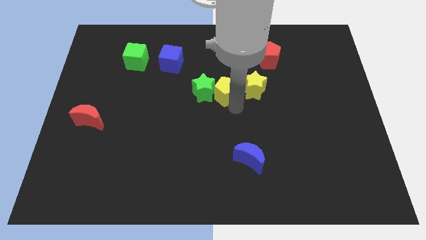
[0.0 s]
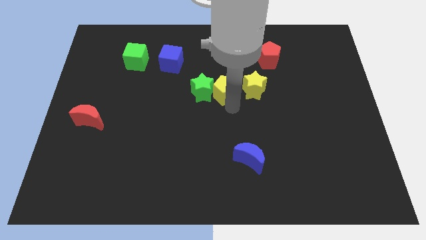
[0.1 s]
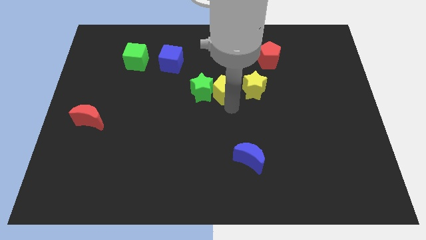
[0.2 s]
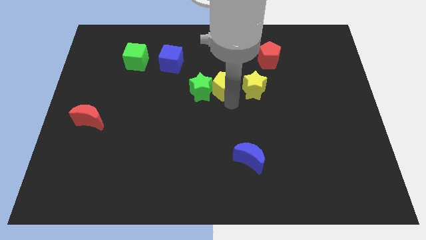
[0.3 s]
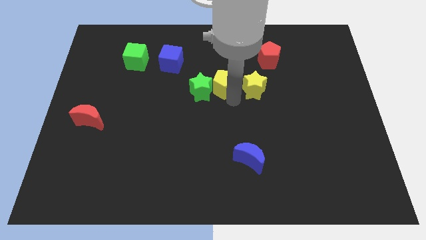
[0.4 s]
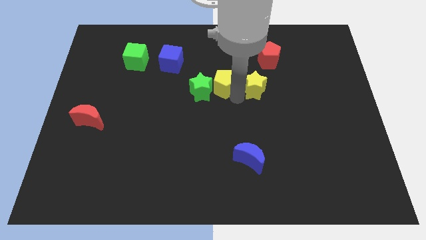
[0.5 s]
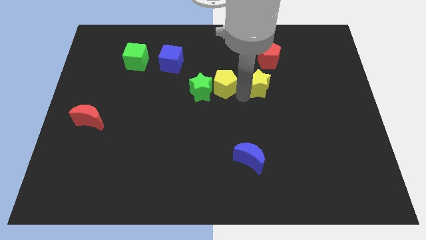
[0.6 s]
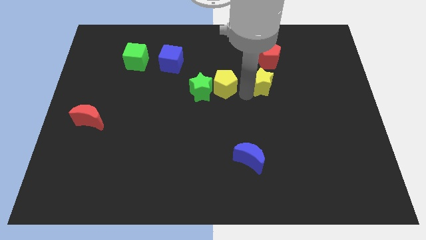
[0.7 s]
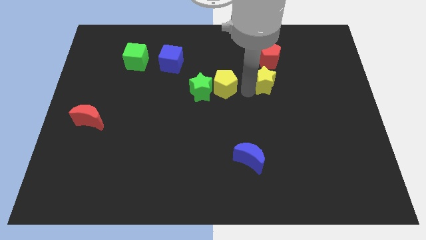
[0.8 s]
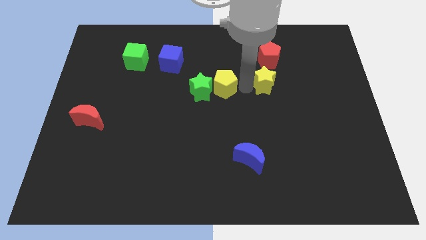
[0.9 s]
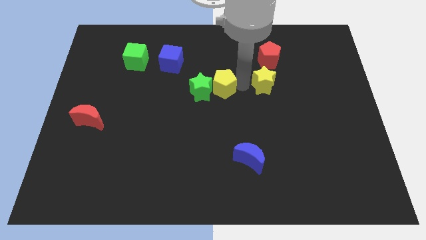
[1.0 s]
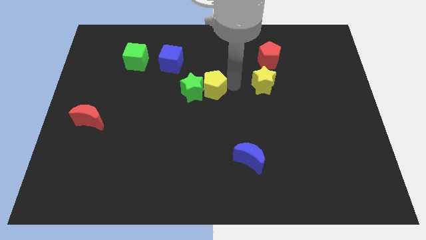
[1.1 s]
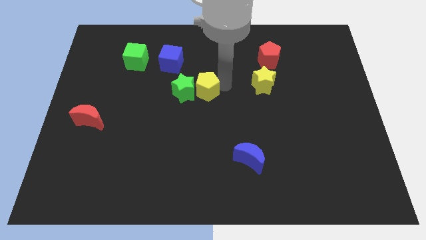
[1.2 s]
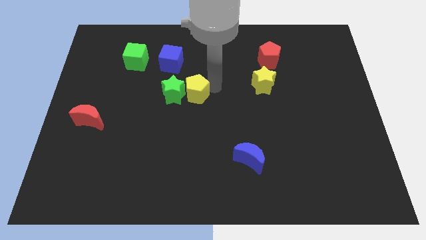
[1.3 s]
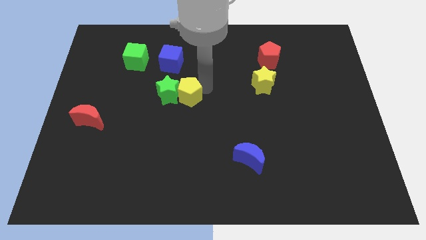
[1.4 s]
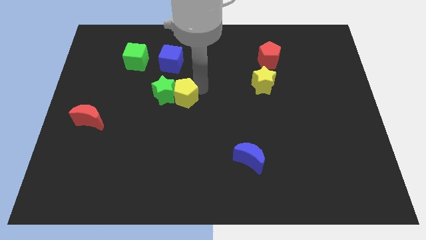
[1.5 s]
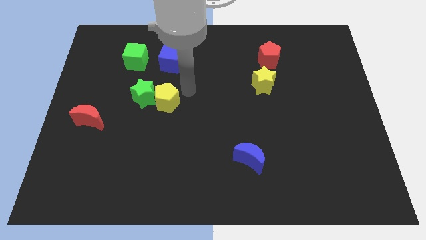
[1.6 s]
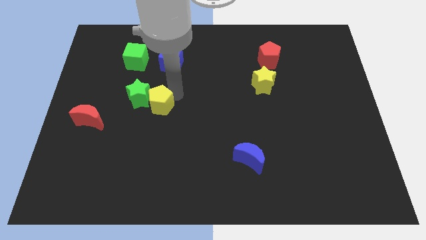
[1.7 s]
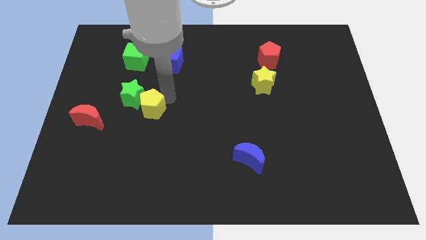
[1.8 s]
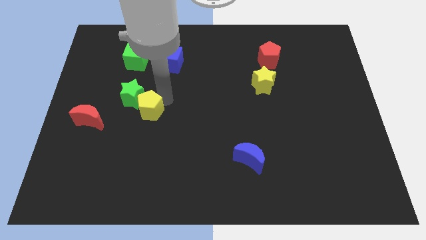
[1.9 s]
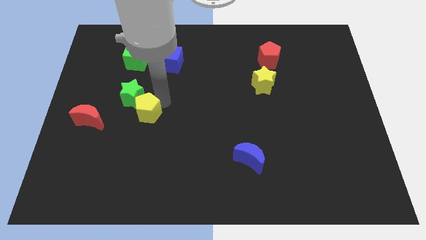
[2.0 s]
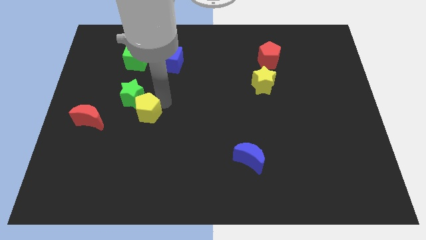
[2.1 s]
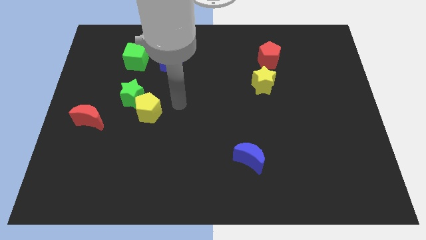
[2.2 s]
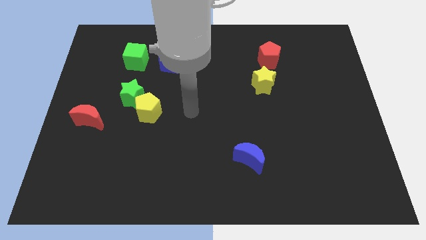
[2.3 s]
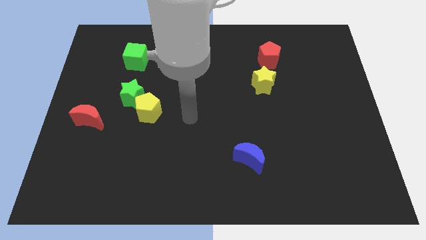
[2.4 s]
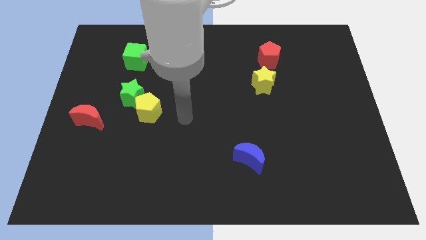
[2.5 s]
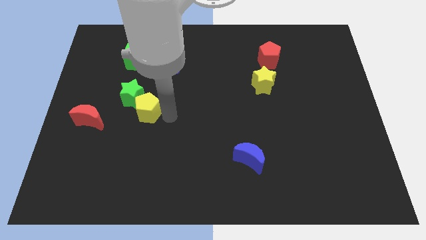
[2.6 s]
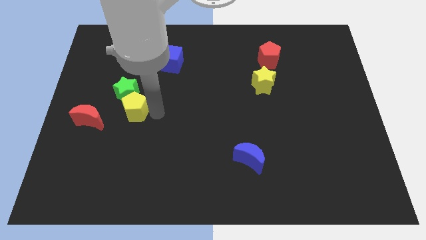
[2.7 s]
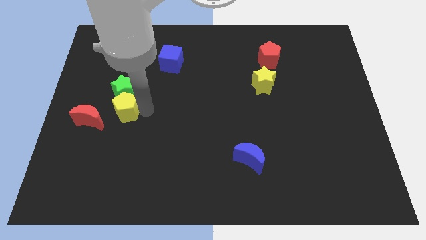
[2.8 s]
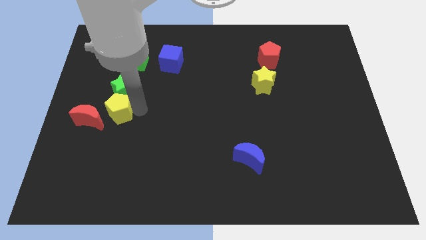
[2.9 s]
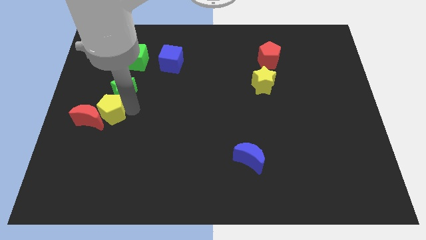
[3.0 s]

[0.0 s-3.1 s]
push the yellow pentagon and green star together to the left

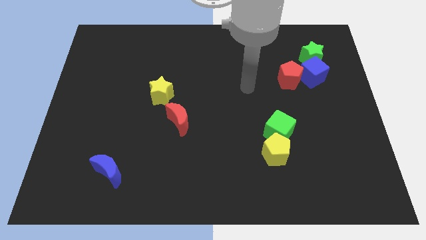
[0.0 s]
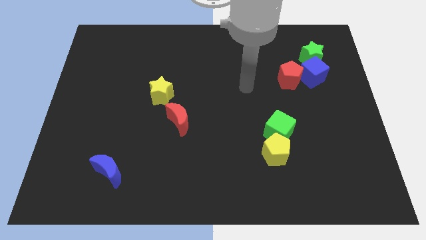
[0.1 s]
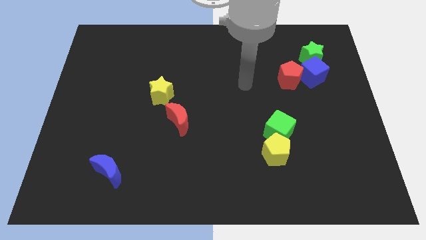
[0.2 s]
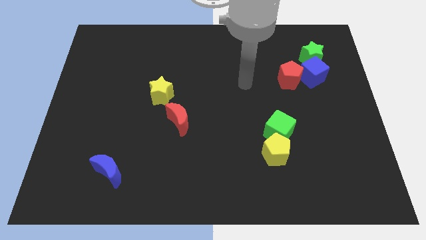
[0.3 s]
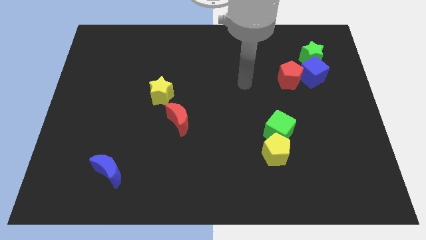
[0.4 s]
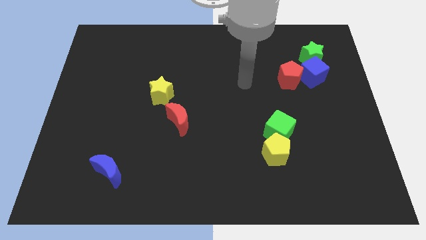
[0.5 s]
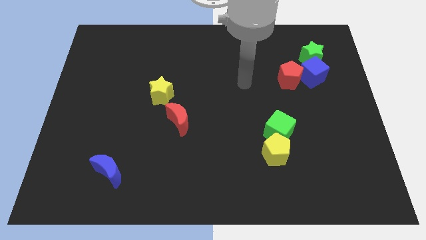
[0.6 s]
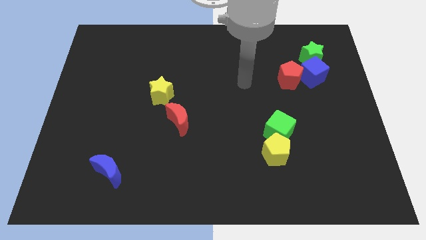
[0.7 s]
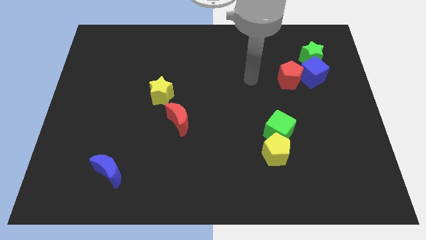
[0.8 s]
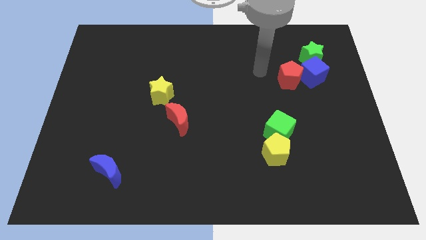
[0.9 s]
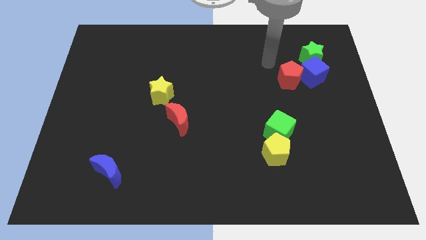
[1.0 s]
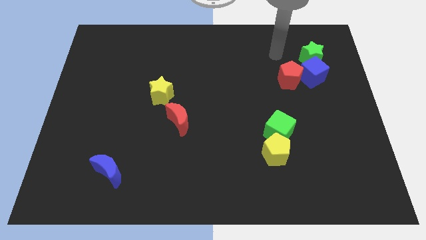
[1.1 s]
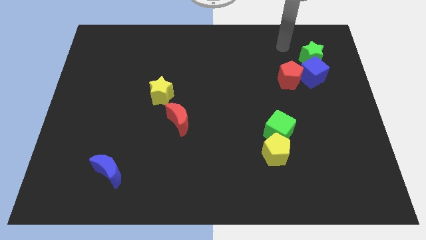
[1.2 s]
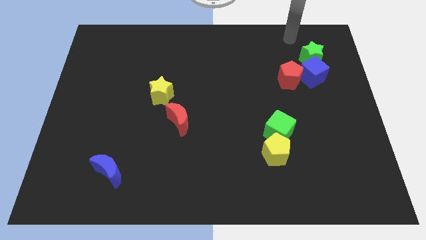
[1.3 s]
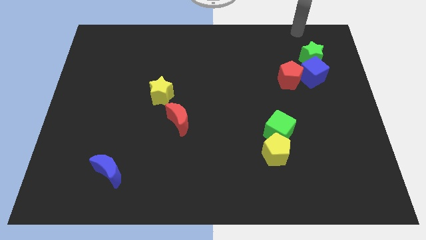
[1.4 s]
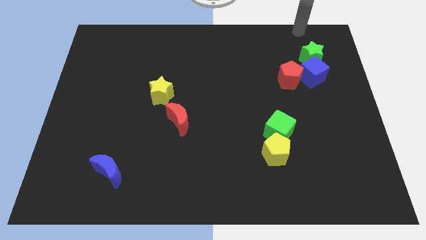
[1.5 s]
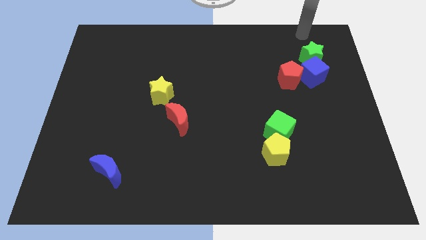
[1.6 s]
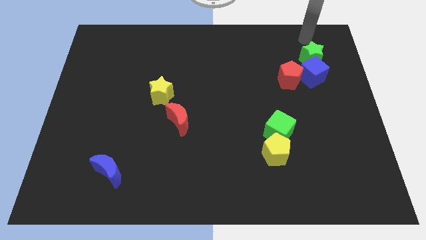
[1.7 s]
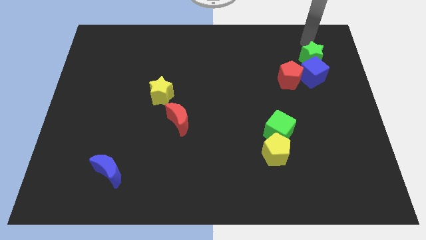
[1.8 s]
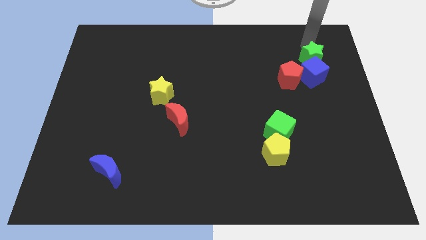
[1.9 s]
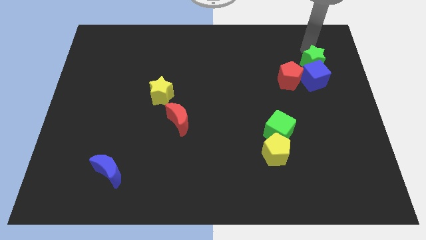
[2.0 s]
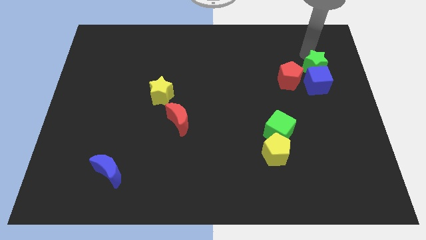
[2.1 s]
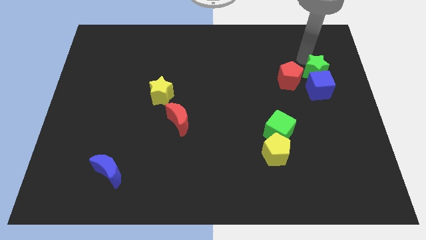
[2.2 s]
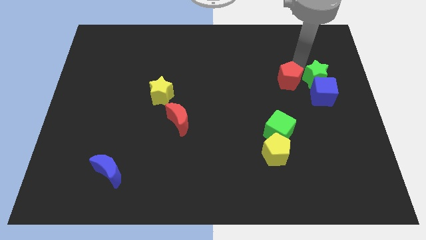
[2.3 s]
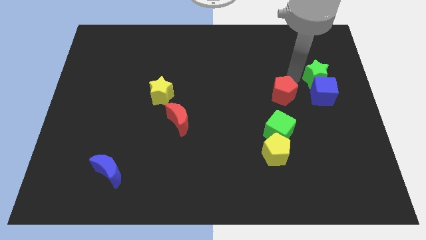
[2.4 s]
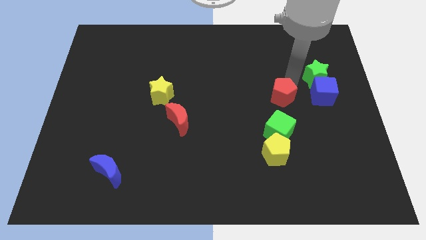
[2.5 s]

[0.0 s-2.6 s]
slightly push the green star to the top of the blue cube

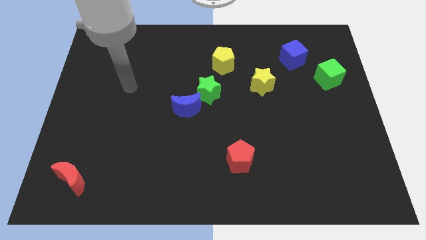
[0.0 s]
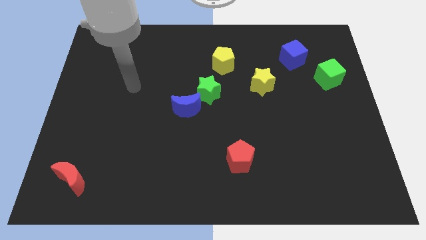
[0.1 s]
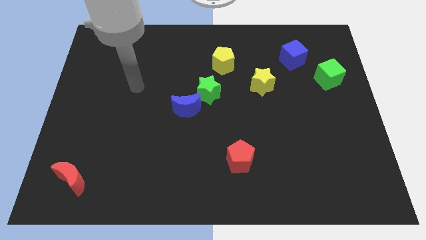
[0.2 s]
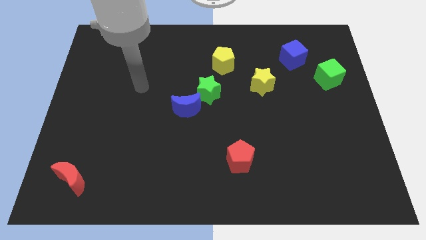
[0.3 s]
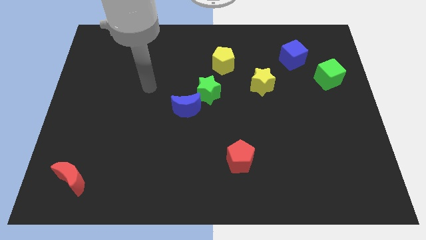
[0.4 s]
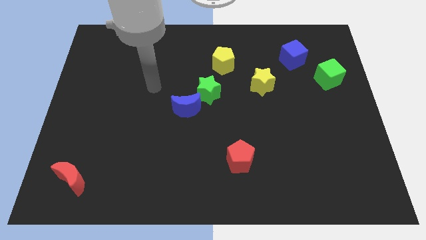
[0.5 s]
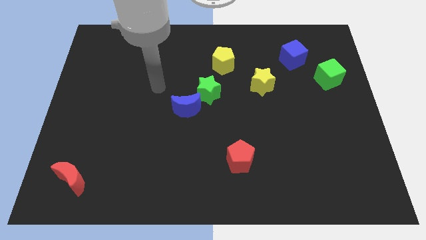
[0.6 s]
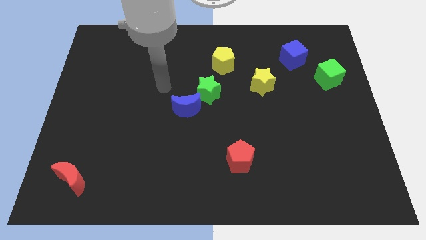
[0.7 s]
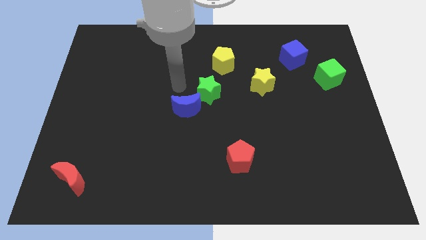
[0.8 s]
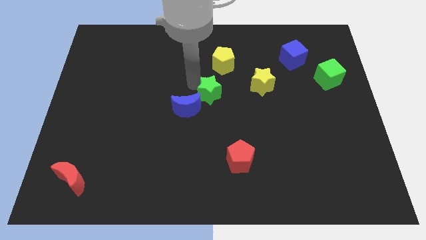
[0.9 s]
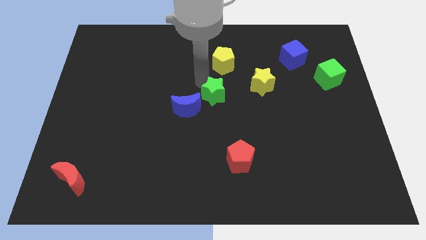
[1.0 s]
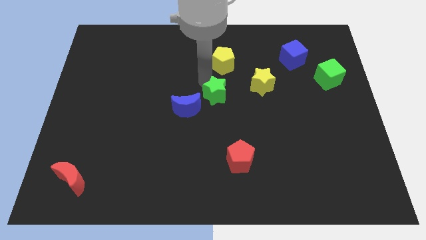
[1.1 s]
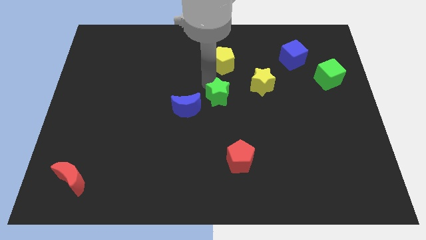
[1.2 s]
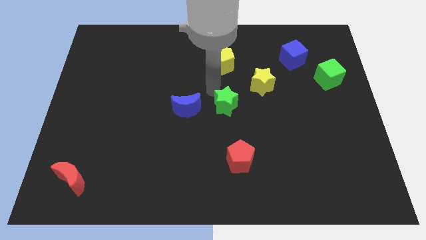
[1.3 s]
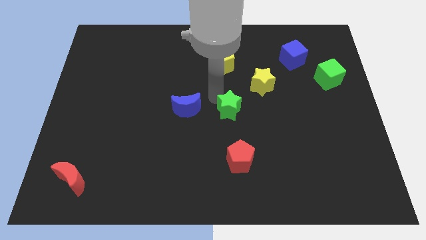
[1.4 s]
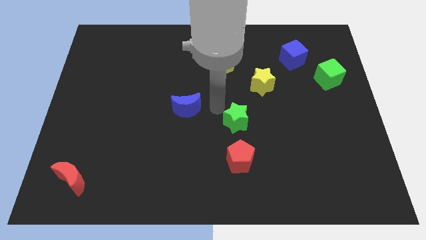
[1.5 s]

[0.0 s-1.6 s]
slightly push the green star away from the blue moon

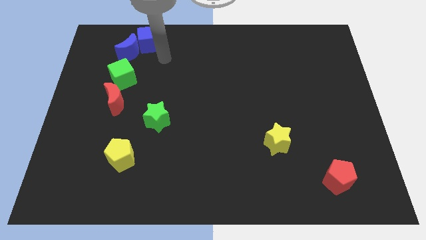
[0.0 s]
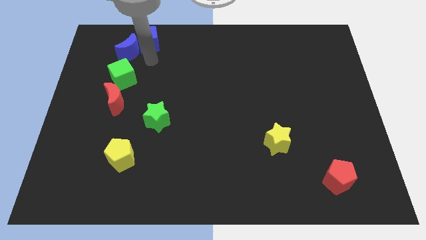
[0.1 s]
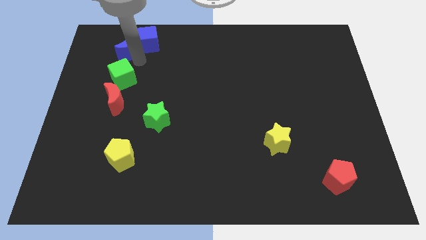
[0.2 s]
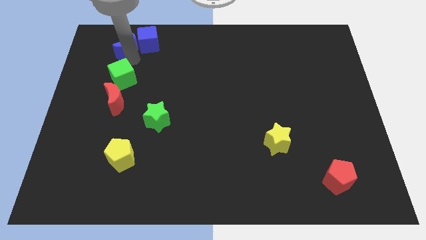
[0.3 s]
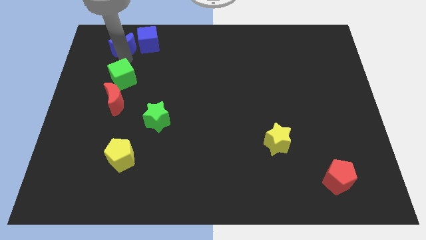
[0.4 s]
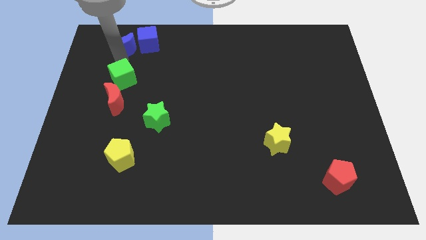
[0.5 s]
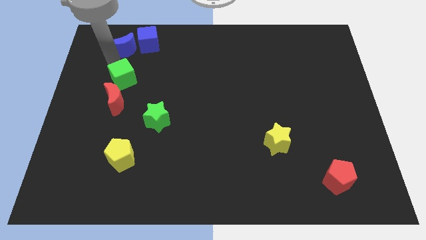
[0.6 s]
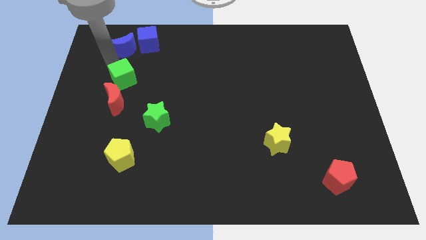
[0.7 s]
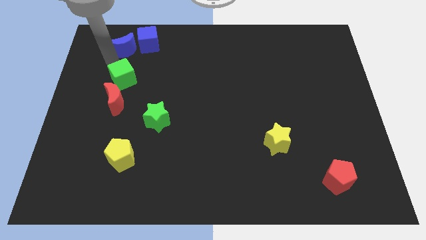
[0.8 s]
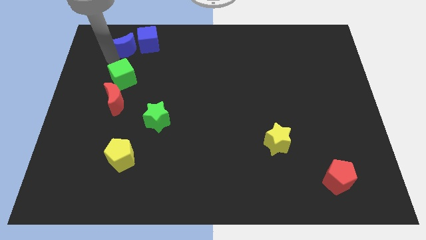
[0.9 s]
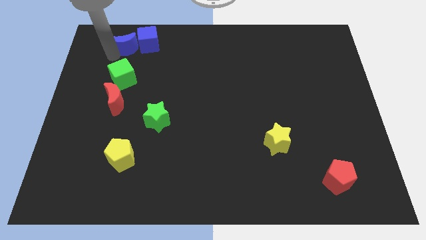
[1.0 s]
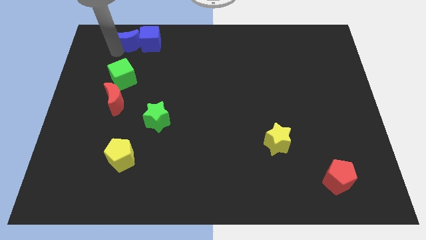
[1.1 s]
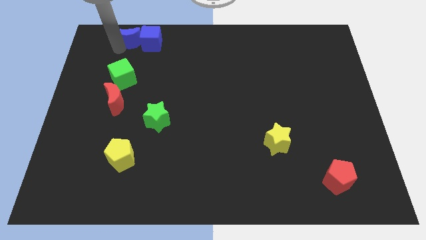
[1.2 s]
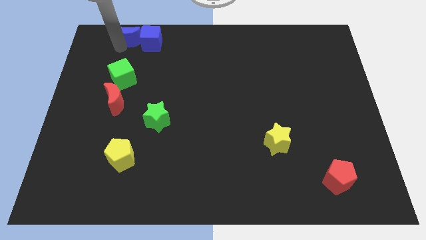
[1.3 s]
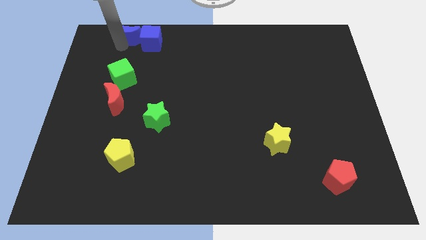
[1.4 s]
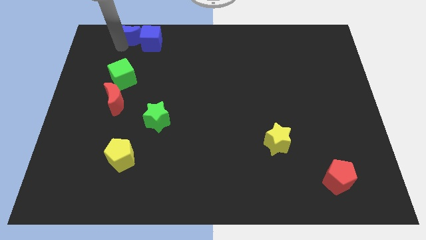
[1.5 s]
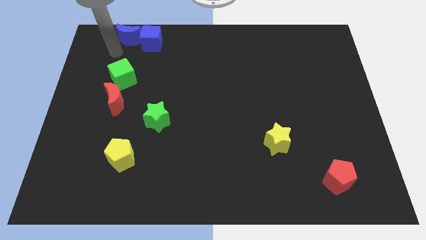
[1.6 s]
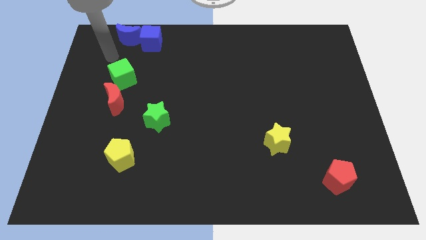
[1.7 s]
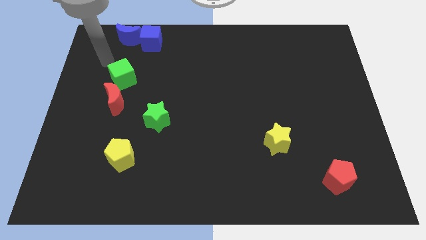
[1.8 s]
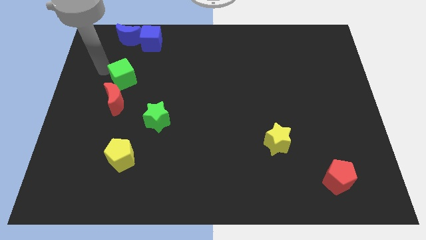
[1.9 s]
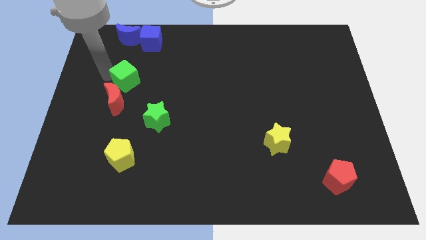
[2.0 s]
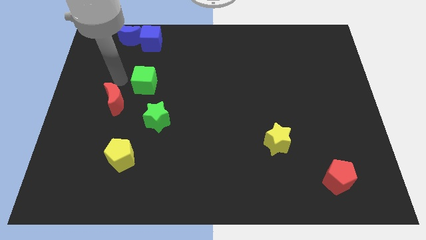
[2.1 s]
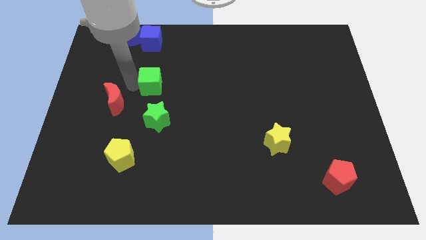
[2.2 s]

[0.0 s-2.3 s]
move the green cube above the green star
